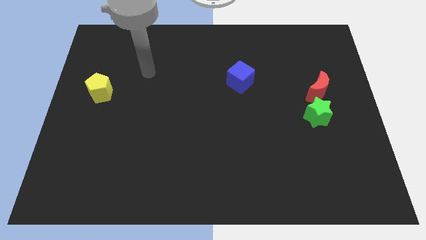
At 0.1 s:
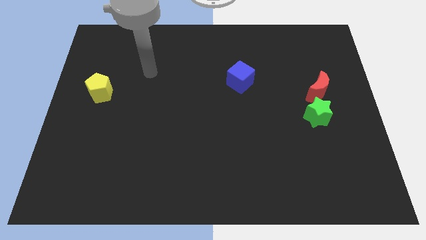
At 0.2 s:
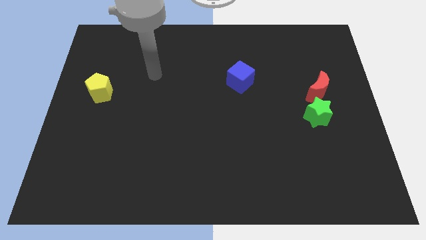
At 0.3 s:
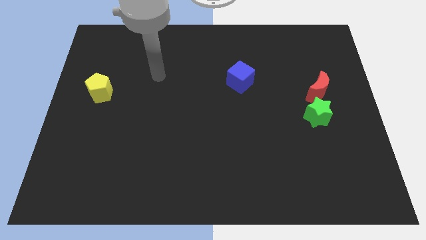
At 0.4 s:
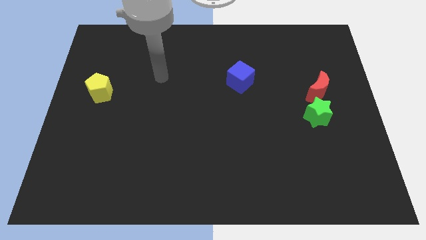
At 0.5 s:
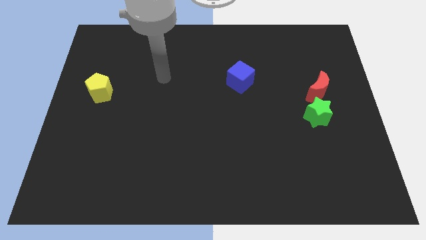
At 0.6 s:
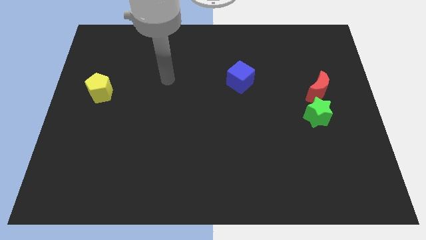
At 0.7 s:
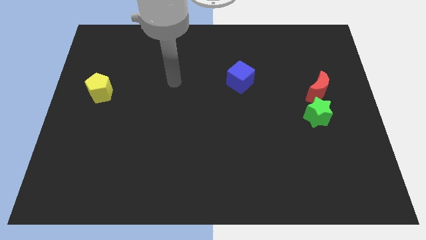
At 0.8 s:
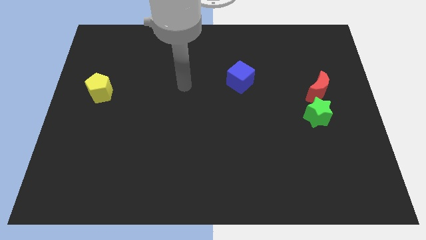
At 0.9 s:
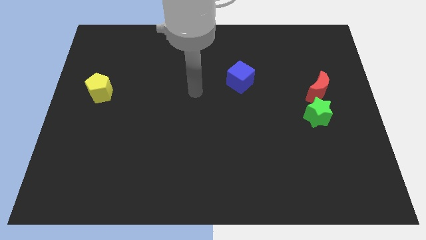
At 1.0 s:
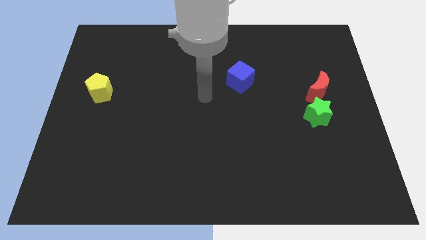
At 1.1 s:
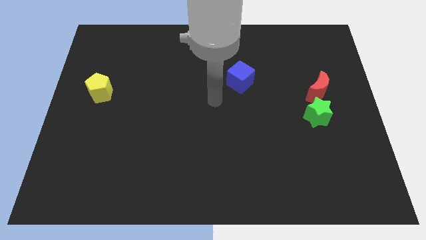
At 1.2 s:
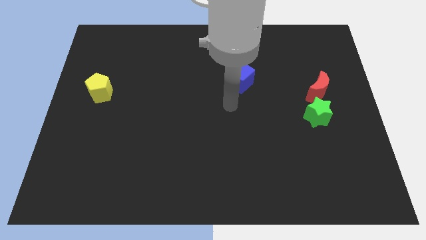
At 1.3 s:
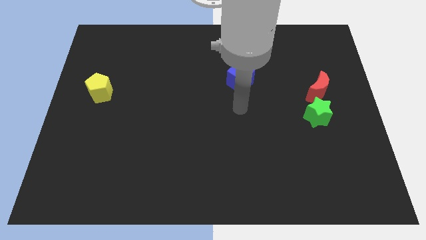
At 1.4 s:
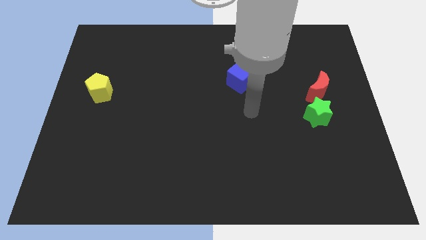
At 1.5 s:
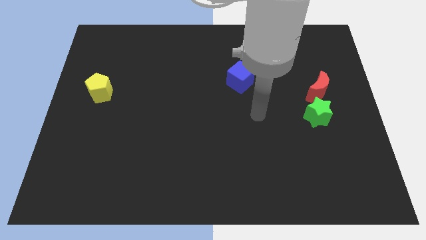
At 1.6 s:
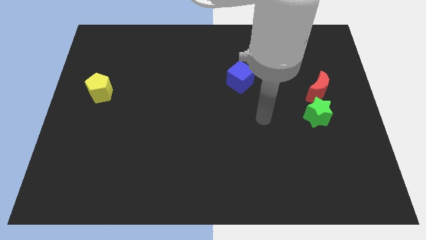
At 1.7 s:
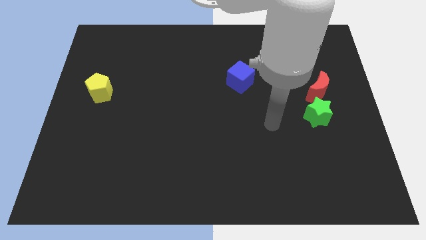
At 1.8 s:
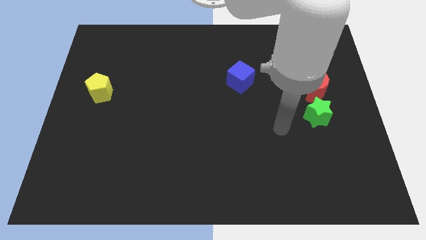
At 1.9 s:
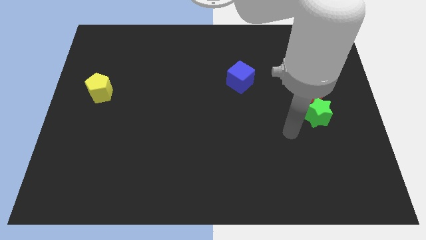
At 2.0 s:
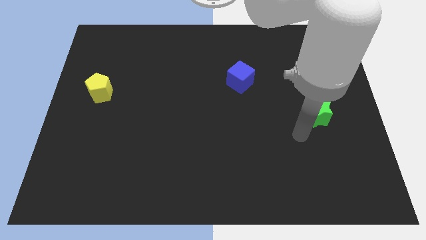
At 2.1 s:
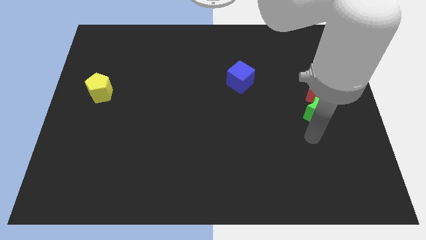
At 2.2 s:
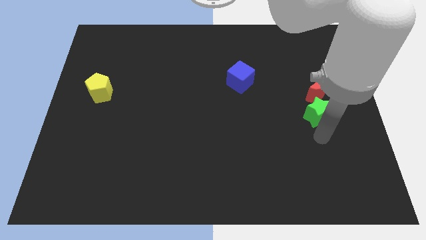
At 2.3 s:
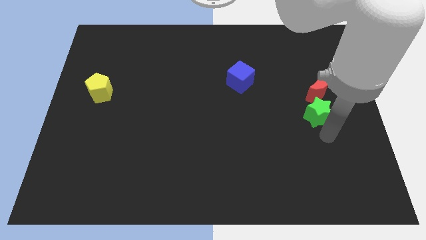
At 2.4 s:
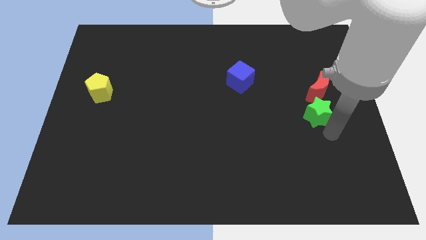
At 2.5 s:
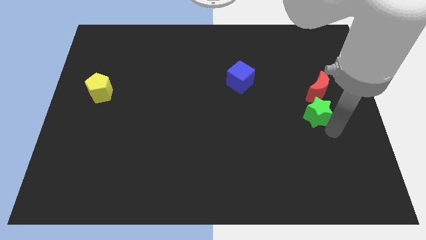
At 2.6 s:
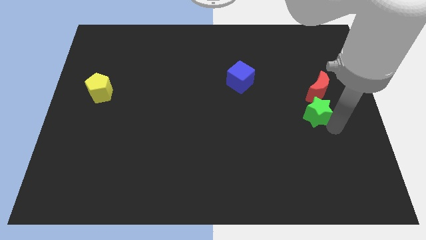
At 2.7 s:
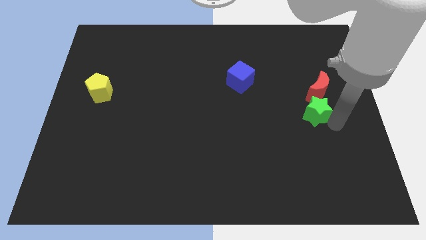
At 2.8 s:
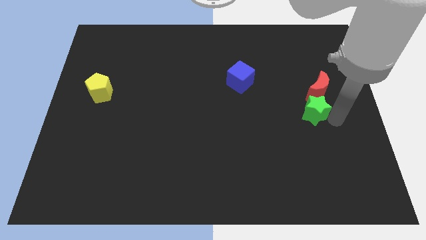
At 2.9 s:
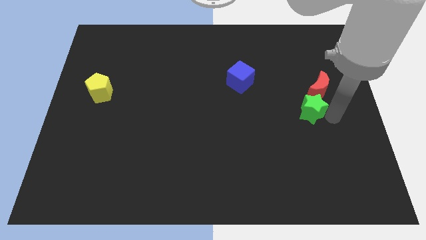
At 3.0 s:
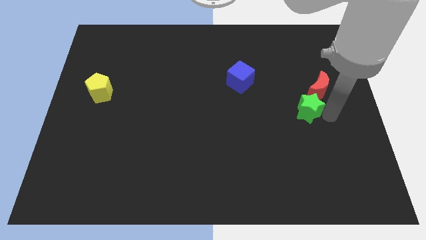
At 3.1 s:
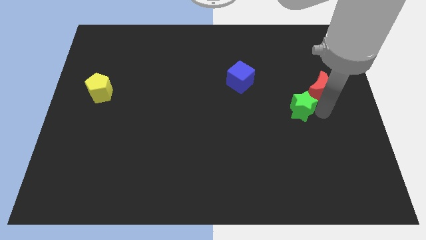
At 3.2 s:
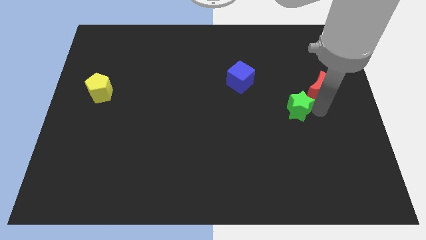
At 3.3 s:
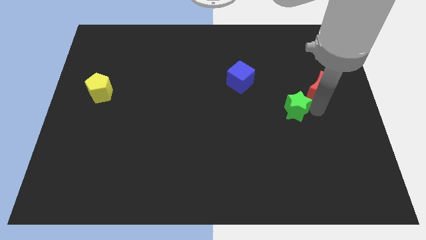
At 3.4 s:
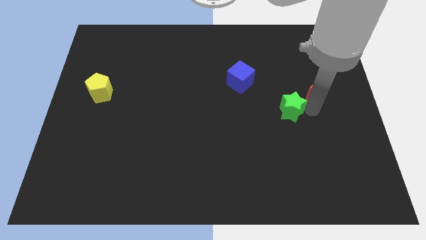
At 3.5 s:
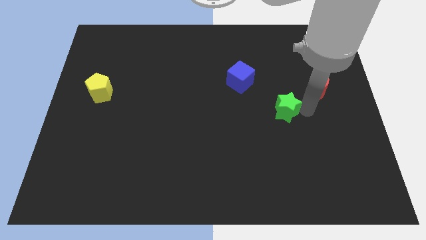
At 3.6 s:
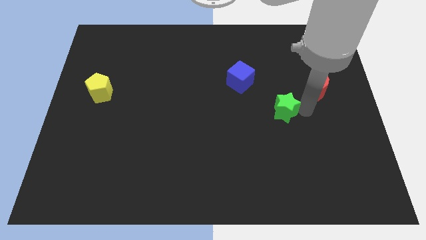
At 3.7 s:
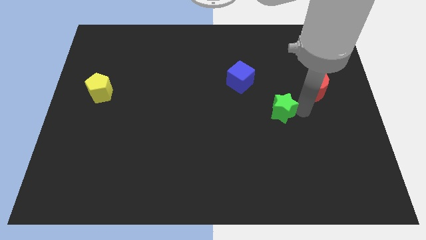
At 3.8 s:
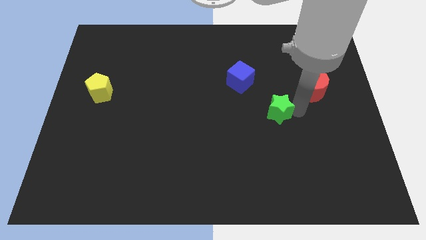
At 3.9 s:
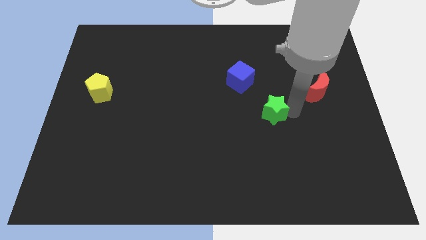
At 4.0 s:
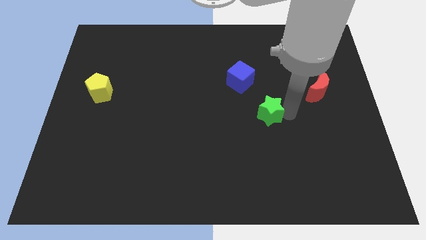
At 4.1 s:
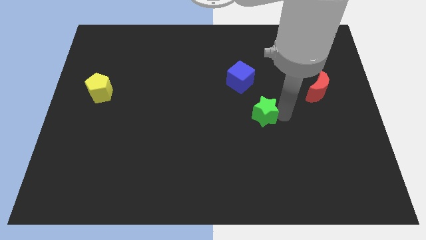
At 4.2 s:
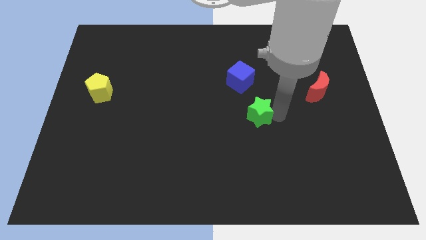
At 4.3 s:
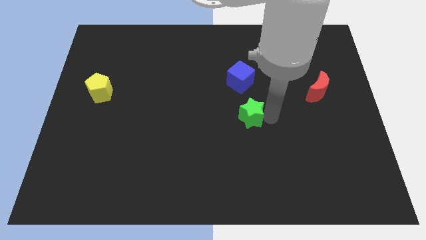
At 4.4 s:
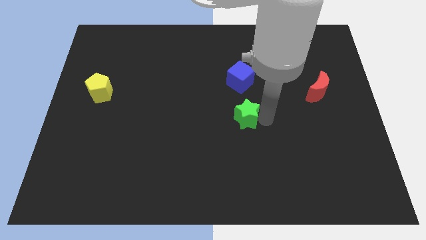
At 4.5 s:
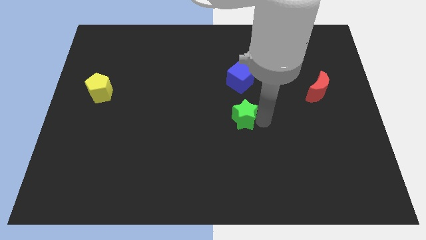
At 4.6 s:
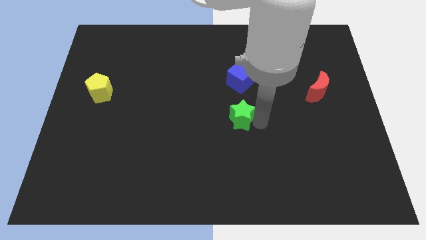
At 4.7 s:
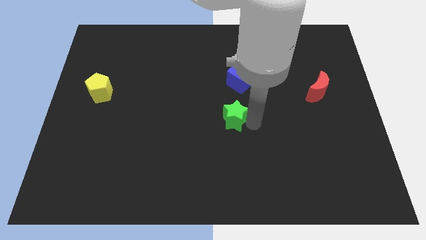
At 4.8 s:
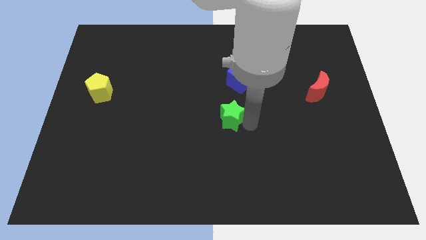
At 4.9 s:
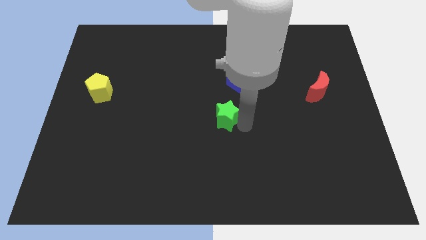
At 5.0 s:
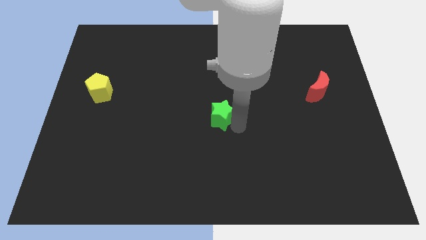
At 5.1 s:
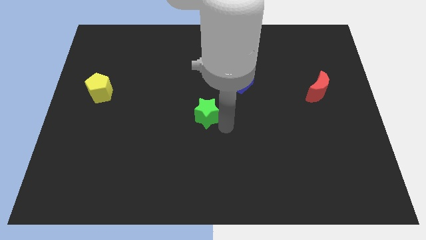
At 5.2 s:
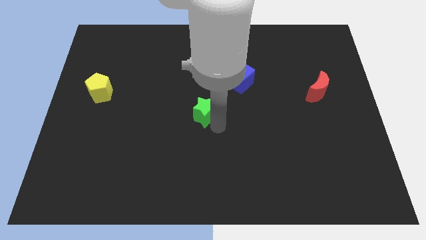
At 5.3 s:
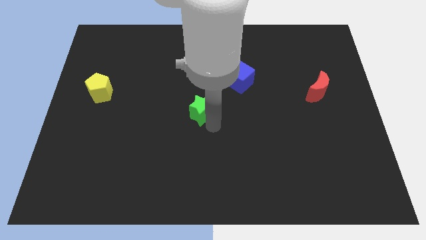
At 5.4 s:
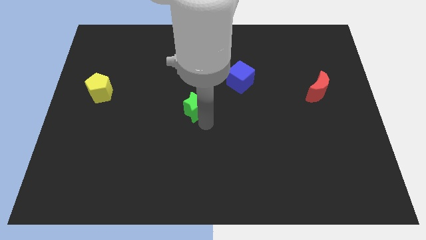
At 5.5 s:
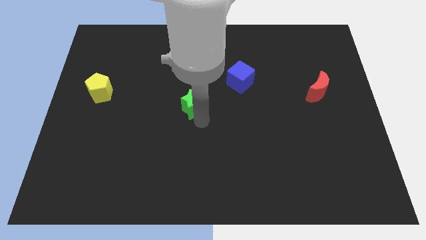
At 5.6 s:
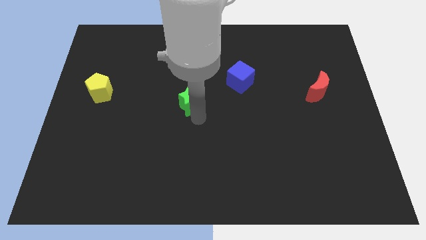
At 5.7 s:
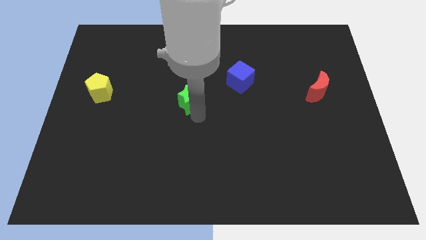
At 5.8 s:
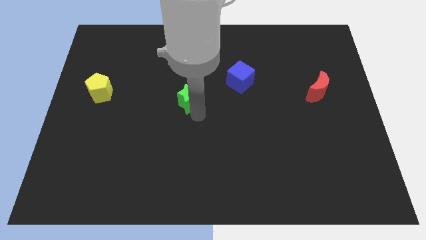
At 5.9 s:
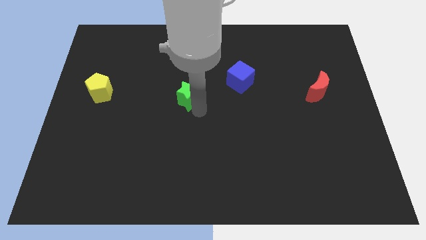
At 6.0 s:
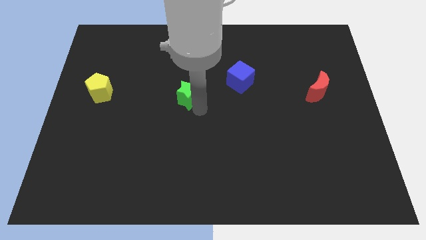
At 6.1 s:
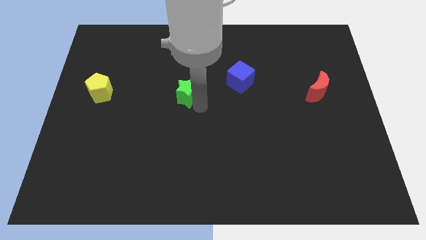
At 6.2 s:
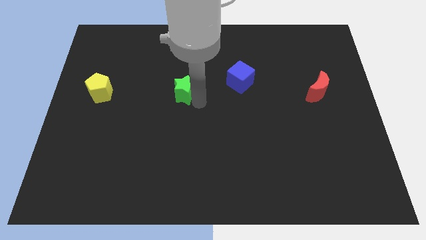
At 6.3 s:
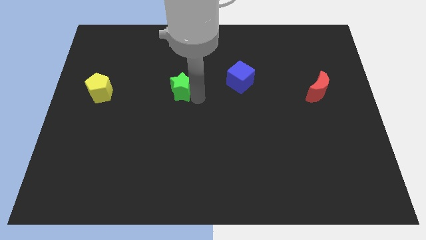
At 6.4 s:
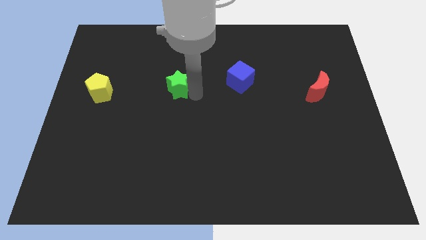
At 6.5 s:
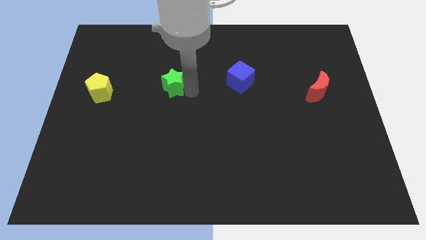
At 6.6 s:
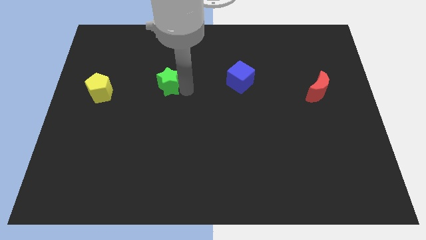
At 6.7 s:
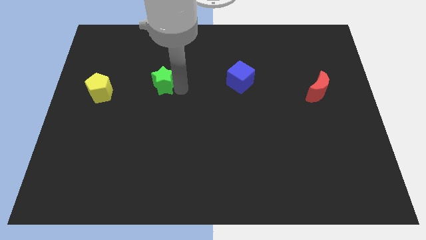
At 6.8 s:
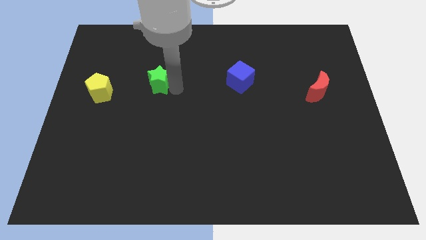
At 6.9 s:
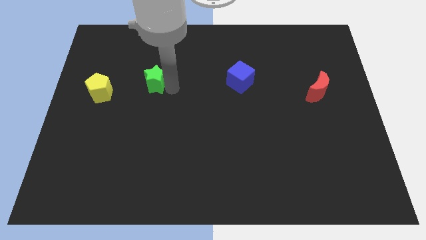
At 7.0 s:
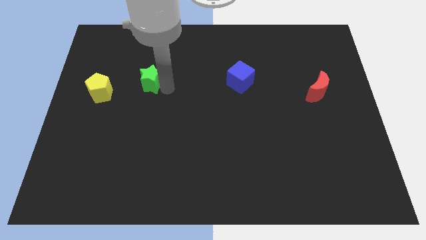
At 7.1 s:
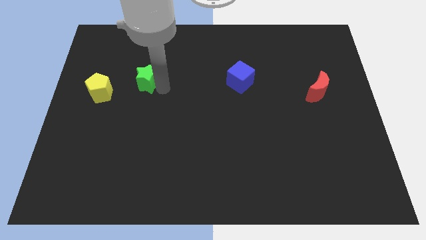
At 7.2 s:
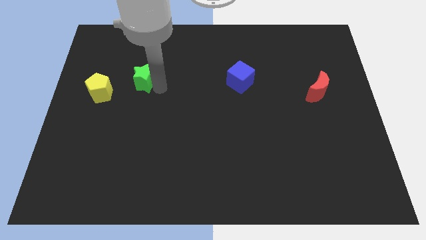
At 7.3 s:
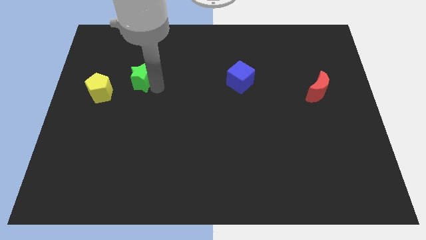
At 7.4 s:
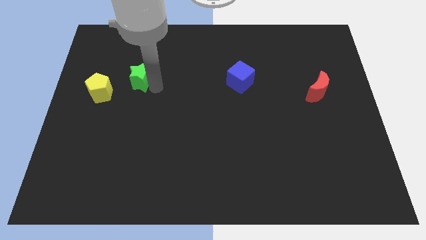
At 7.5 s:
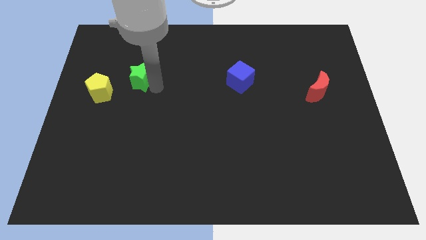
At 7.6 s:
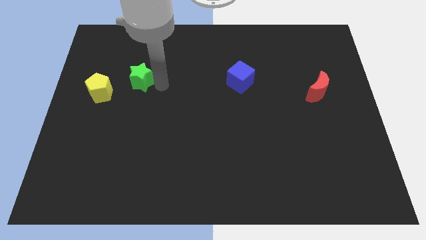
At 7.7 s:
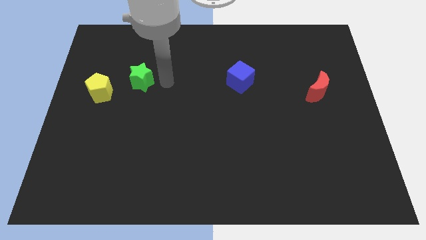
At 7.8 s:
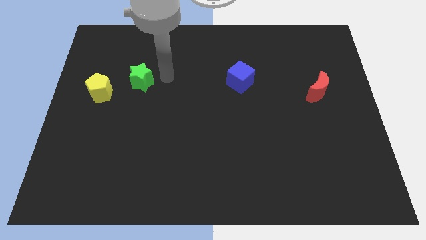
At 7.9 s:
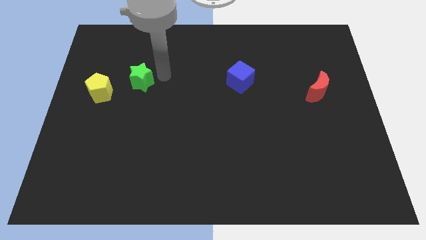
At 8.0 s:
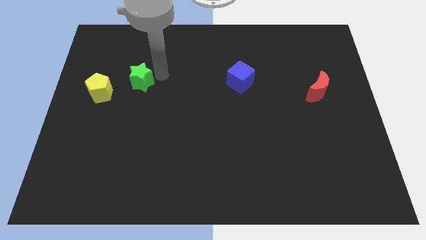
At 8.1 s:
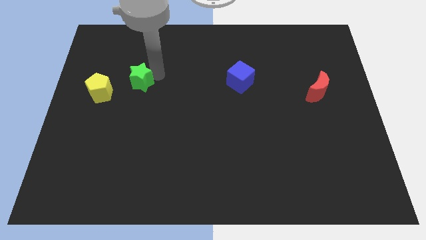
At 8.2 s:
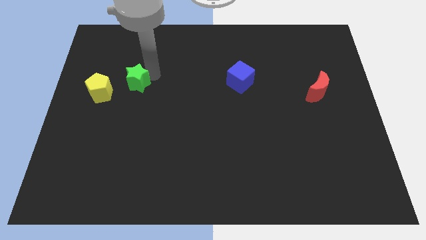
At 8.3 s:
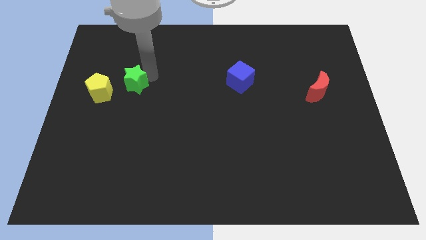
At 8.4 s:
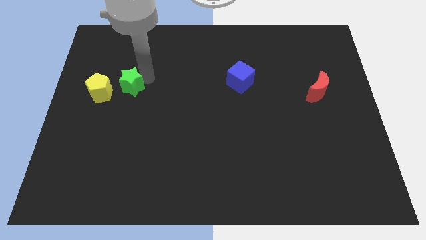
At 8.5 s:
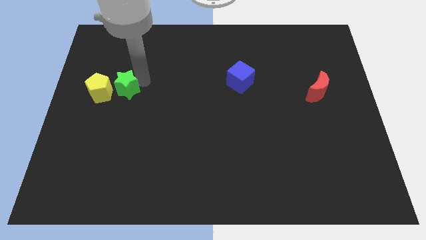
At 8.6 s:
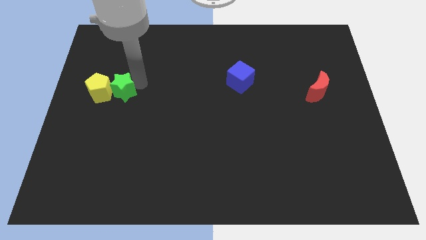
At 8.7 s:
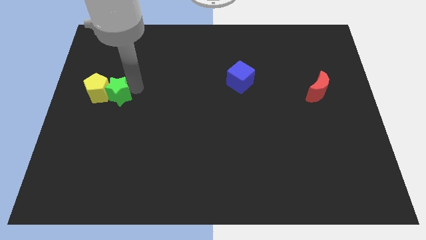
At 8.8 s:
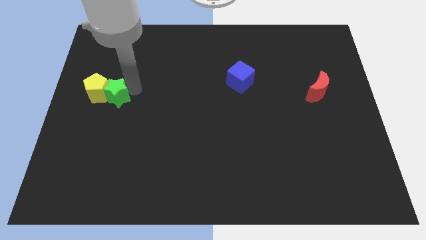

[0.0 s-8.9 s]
push the star next to the yellow pentagon
